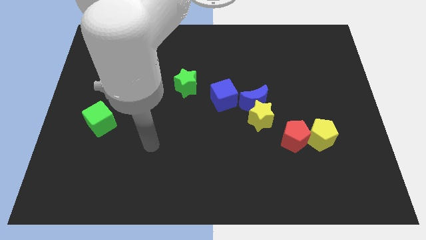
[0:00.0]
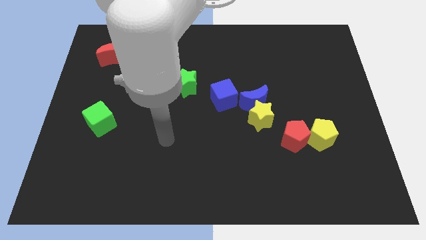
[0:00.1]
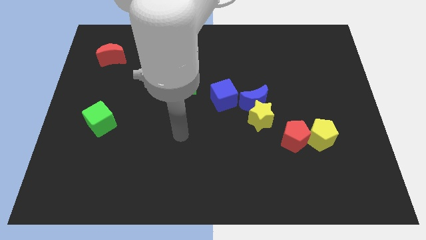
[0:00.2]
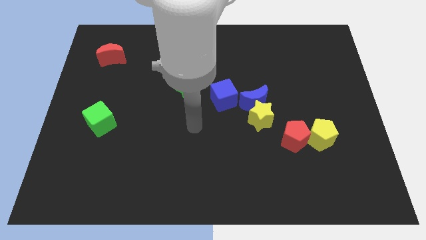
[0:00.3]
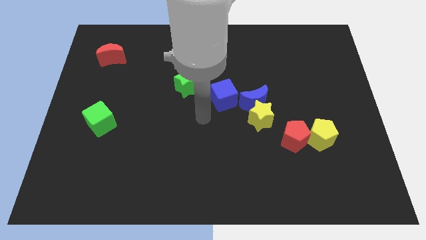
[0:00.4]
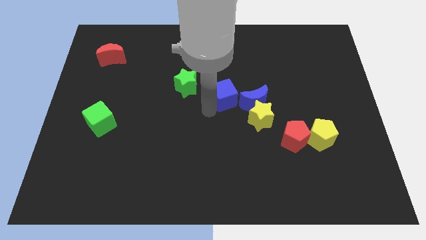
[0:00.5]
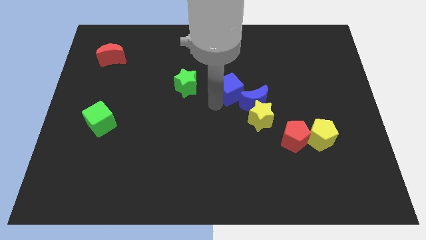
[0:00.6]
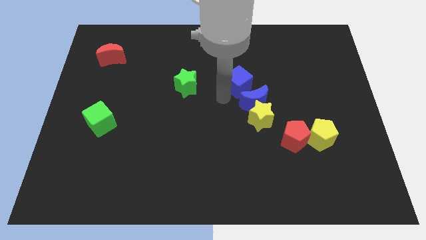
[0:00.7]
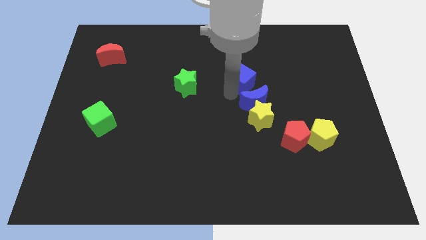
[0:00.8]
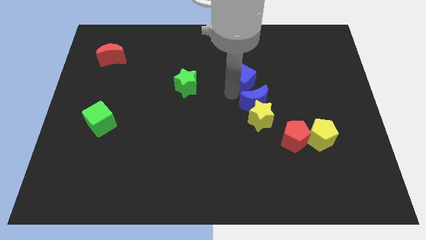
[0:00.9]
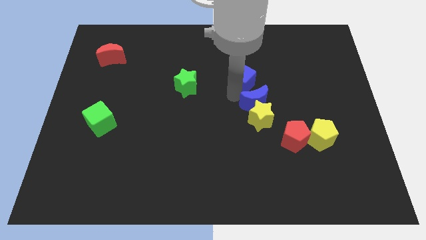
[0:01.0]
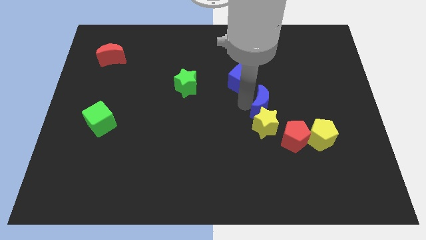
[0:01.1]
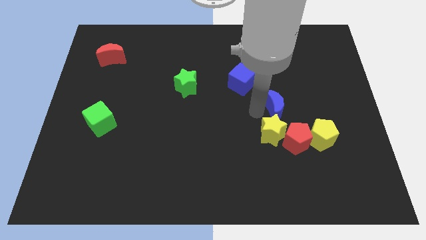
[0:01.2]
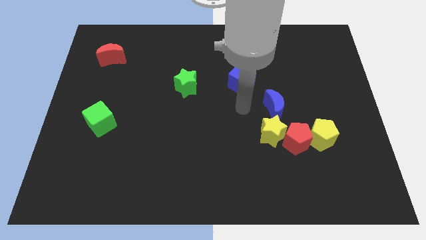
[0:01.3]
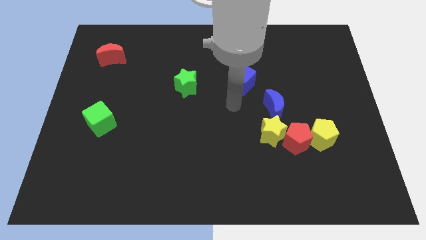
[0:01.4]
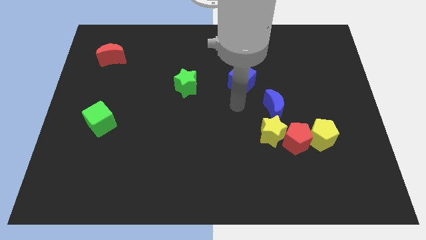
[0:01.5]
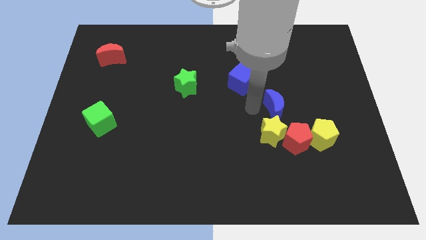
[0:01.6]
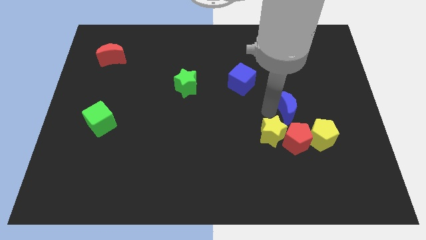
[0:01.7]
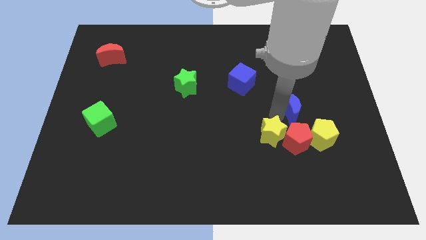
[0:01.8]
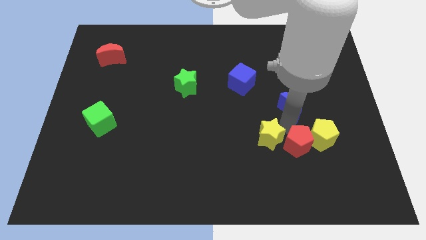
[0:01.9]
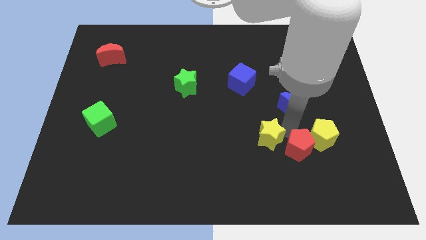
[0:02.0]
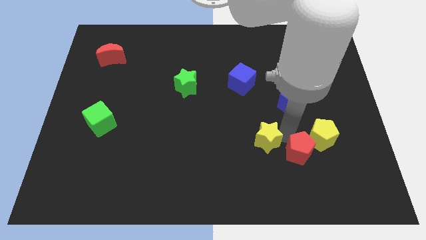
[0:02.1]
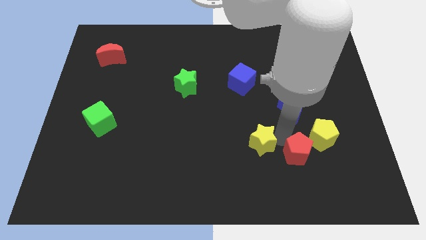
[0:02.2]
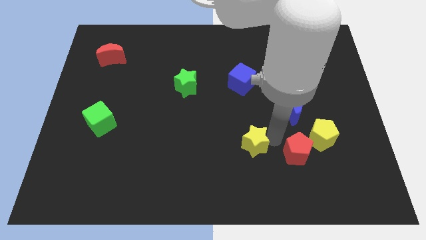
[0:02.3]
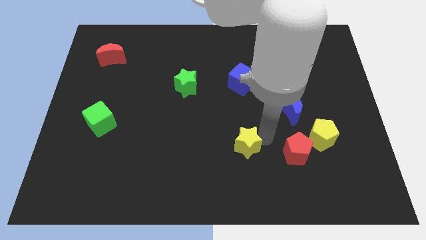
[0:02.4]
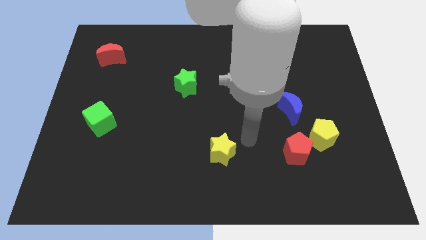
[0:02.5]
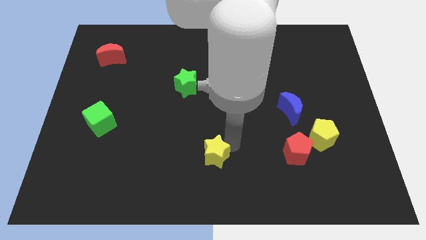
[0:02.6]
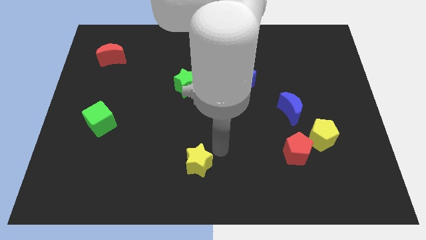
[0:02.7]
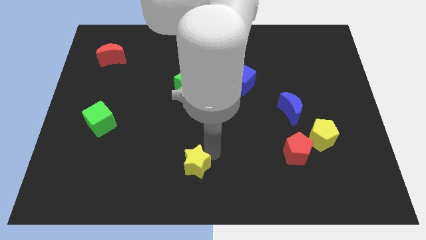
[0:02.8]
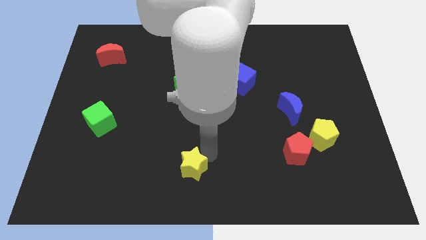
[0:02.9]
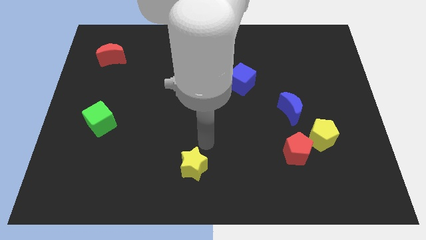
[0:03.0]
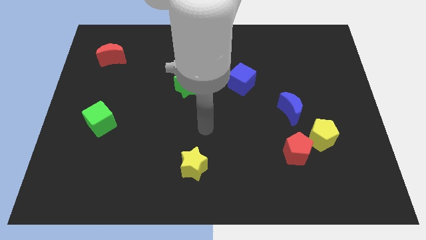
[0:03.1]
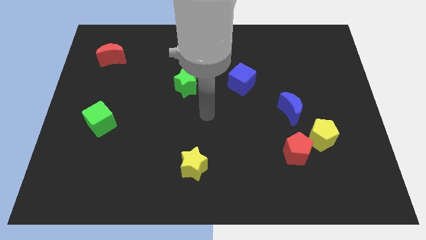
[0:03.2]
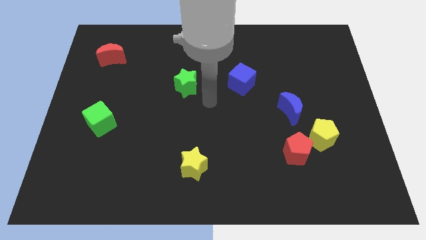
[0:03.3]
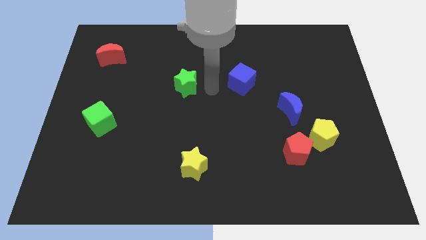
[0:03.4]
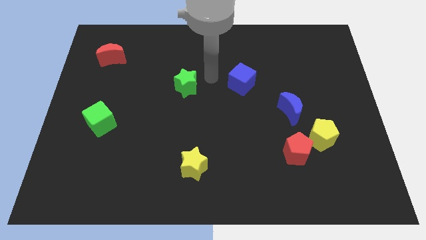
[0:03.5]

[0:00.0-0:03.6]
make a triangle by moving blue blocks and the yellow star

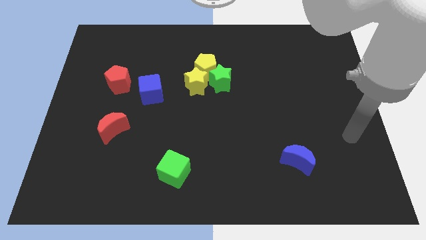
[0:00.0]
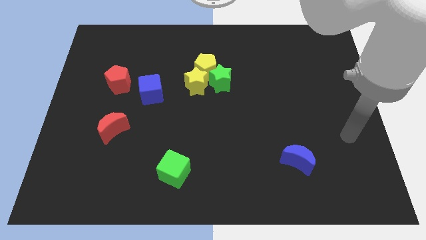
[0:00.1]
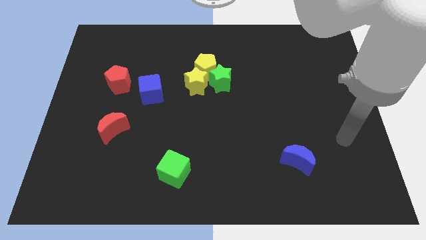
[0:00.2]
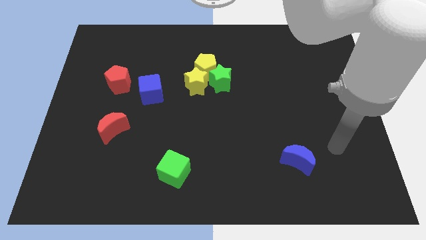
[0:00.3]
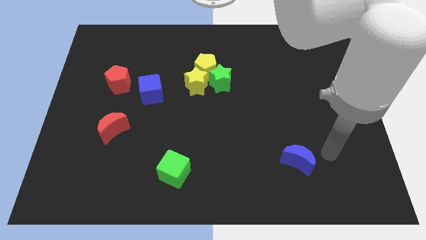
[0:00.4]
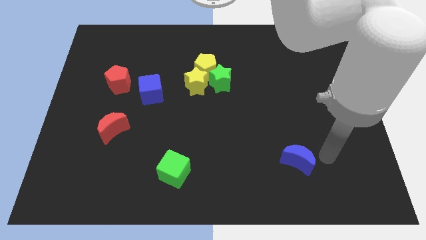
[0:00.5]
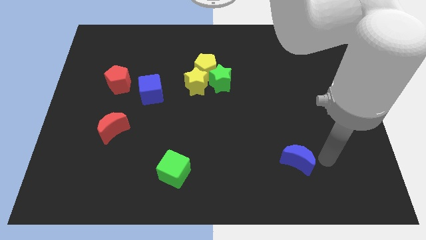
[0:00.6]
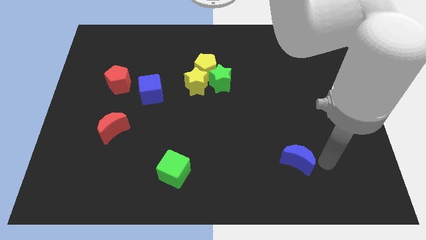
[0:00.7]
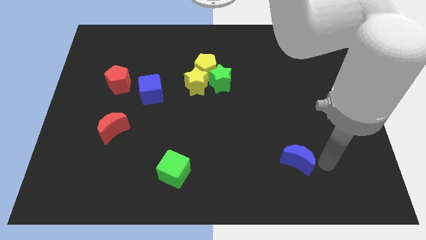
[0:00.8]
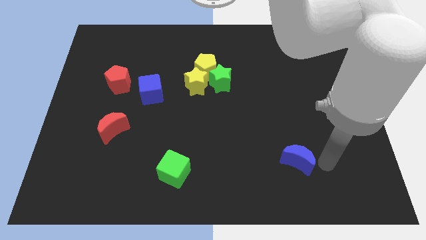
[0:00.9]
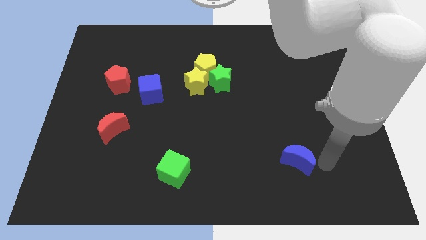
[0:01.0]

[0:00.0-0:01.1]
place arm on the bottom of blue crescent

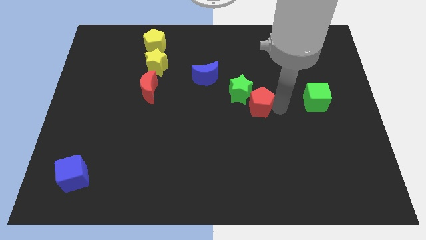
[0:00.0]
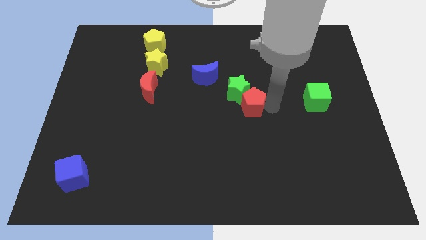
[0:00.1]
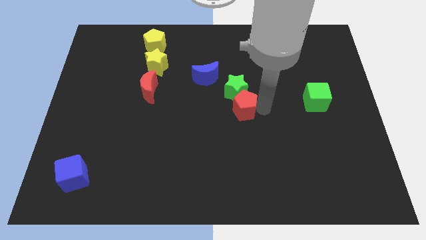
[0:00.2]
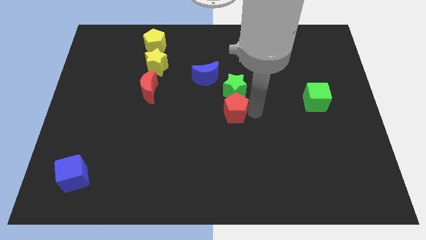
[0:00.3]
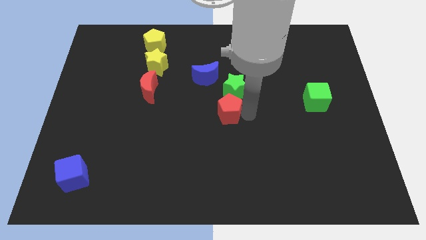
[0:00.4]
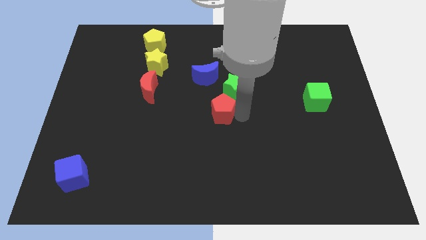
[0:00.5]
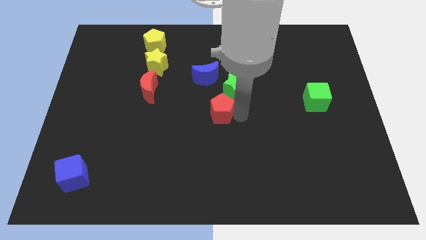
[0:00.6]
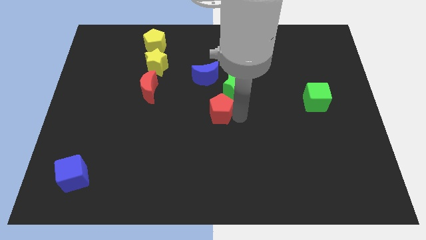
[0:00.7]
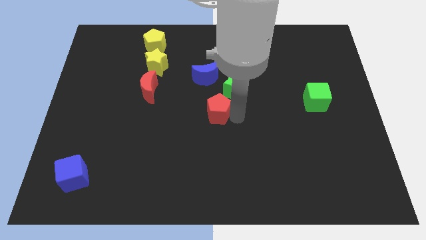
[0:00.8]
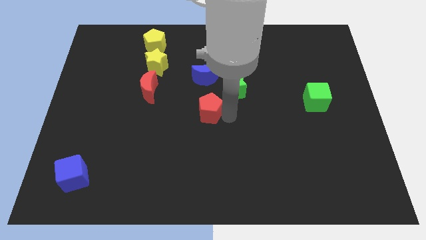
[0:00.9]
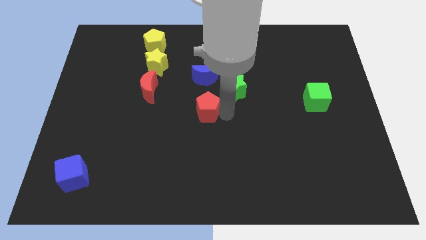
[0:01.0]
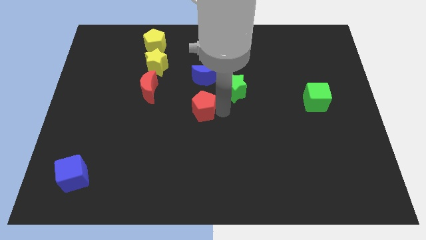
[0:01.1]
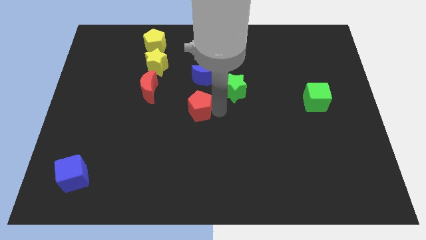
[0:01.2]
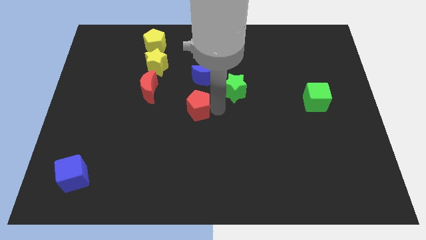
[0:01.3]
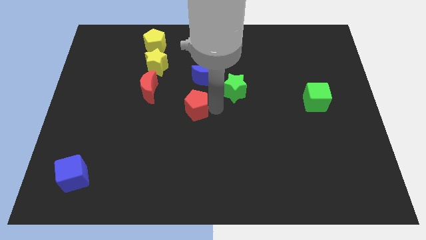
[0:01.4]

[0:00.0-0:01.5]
place the red pentagon below the blue moon

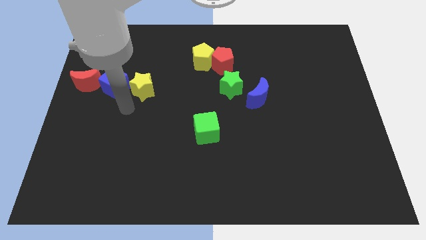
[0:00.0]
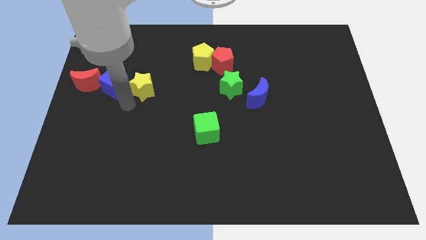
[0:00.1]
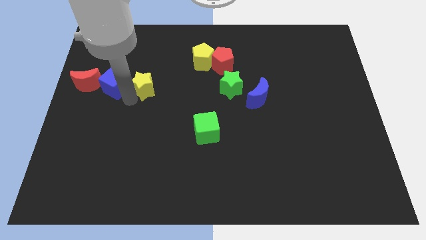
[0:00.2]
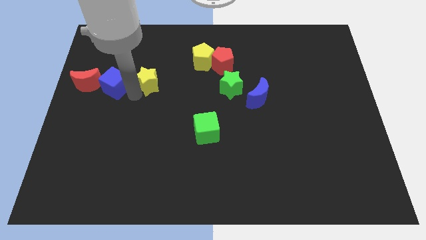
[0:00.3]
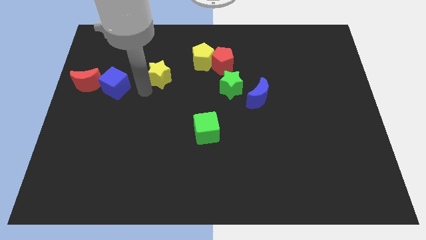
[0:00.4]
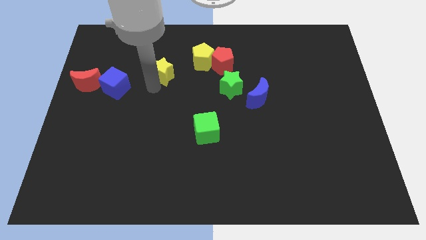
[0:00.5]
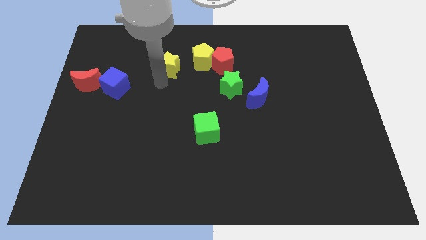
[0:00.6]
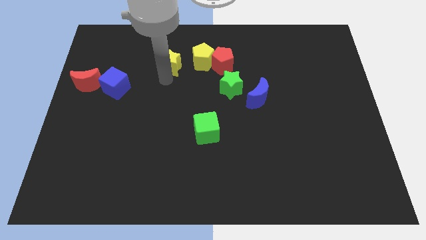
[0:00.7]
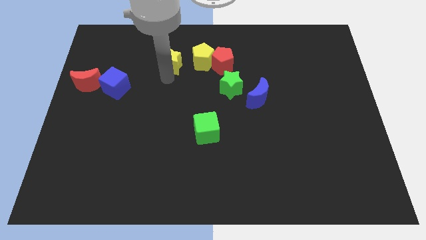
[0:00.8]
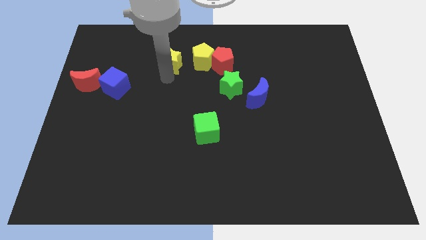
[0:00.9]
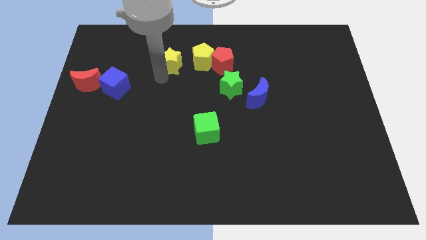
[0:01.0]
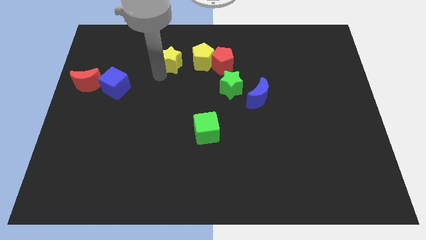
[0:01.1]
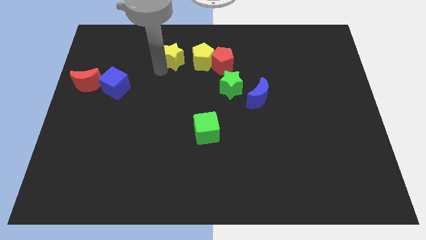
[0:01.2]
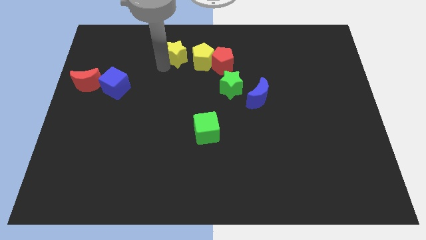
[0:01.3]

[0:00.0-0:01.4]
move the yellow star to the left of the yellow pentagon

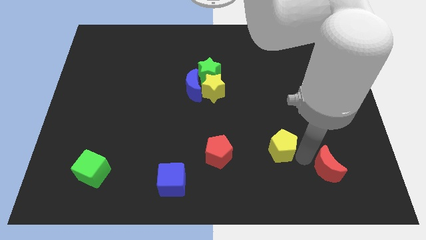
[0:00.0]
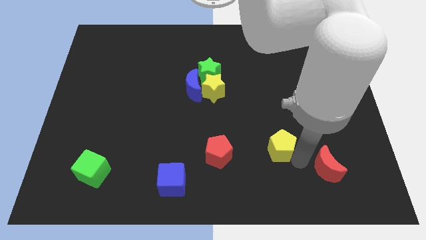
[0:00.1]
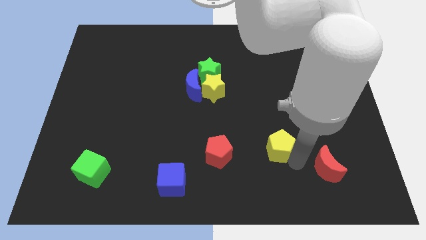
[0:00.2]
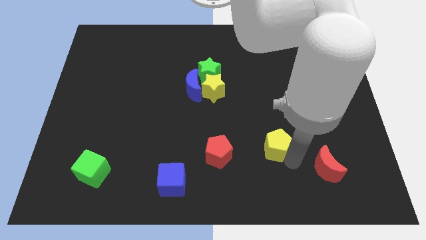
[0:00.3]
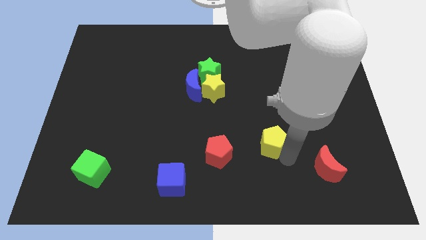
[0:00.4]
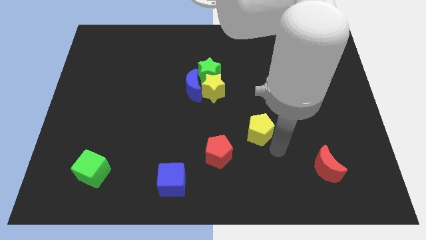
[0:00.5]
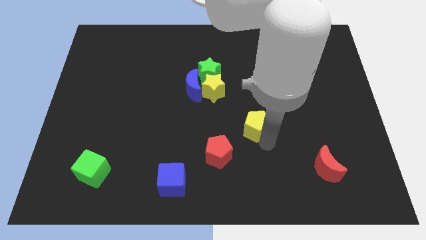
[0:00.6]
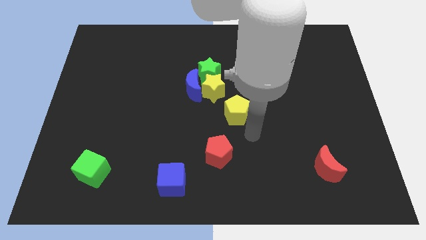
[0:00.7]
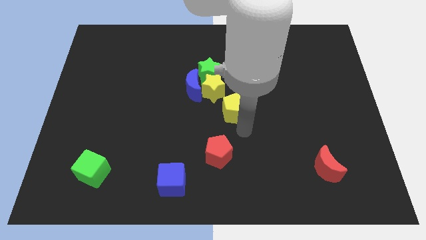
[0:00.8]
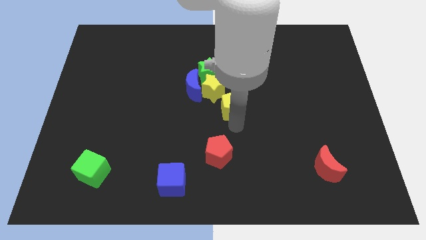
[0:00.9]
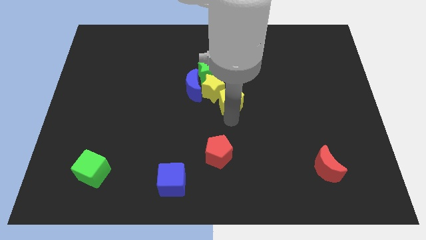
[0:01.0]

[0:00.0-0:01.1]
push the yellow pentagon towards the right bottom of the yellow star

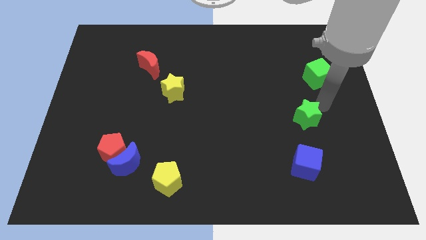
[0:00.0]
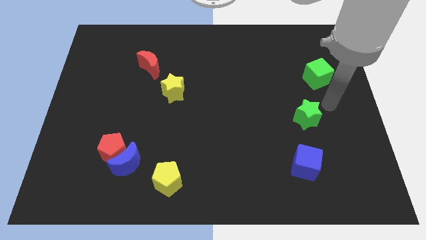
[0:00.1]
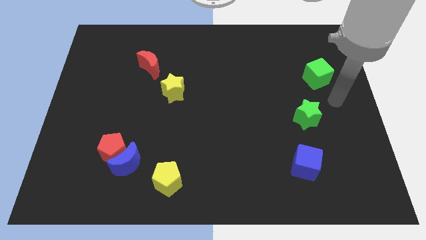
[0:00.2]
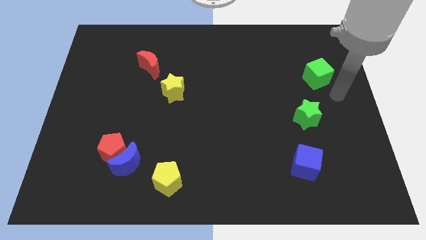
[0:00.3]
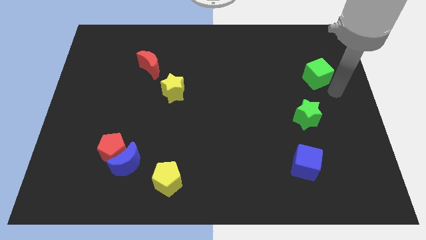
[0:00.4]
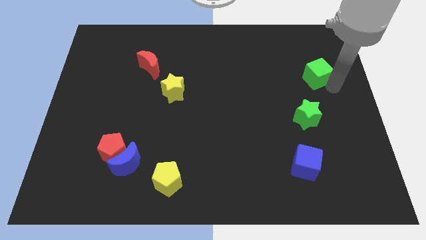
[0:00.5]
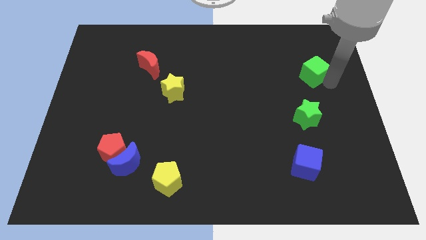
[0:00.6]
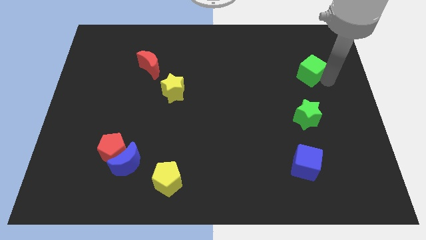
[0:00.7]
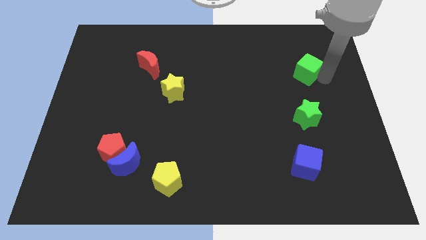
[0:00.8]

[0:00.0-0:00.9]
place green cube to the top of green star
